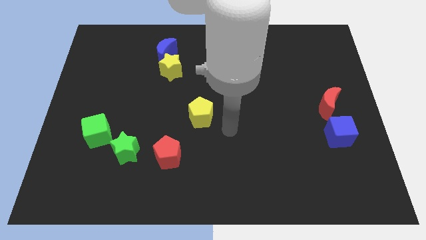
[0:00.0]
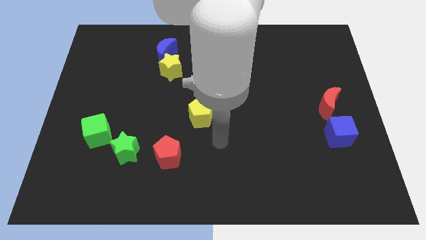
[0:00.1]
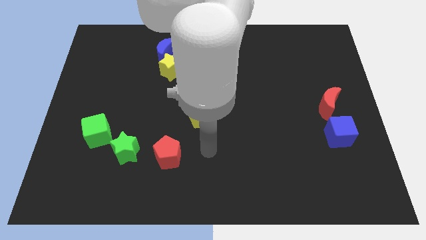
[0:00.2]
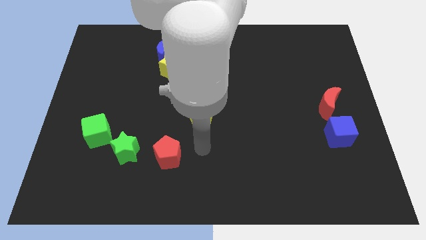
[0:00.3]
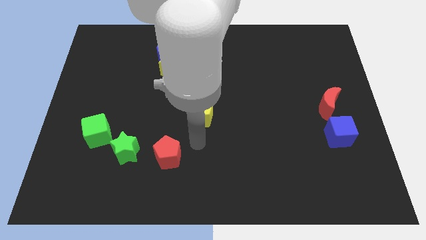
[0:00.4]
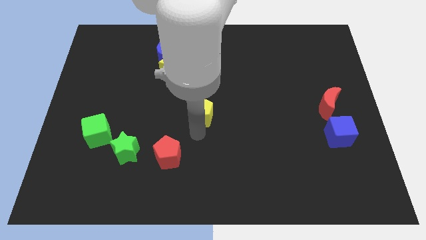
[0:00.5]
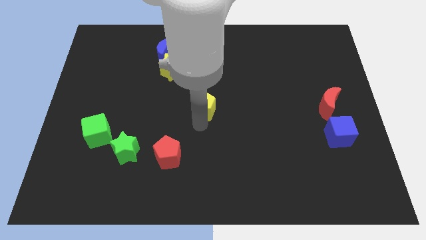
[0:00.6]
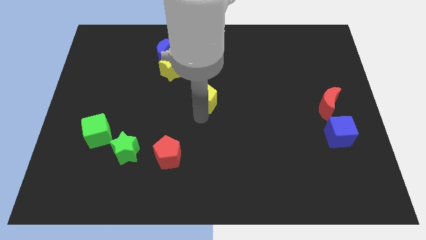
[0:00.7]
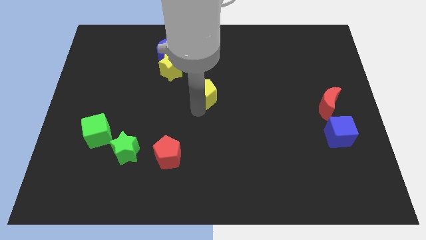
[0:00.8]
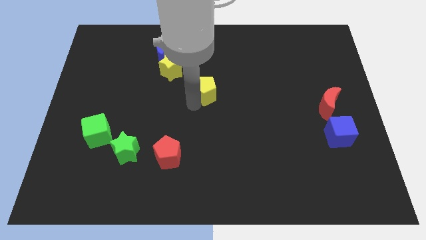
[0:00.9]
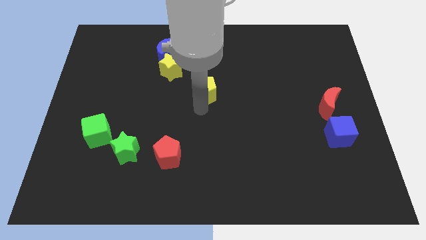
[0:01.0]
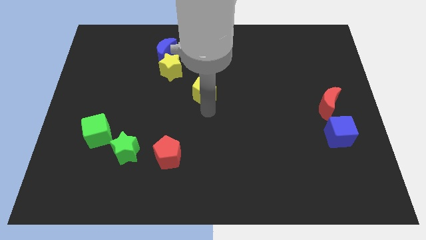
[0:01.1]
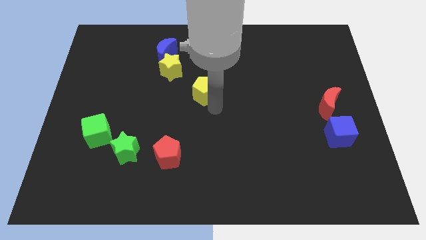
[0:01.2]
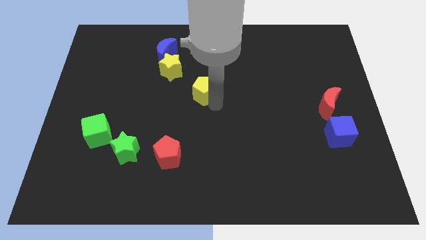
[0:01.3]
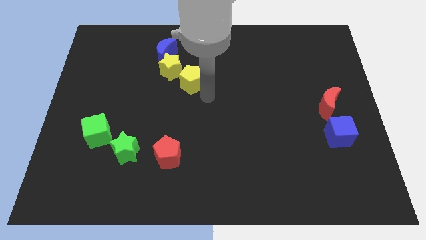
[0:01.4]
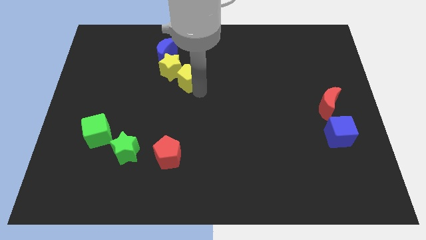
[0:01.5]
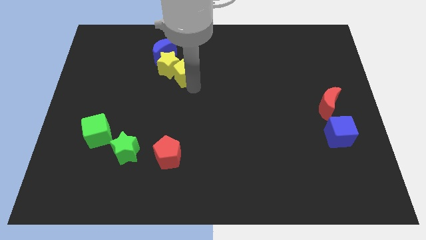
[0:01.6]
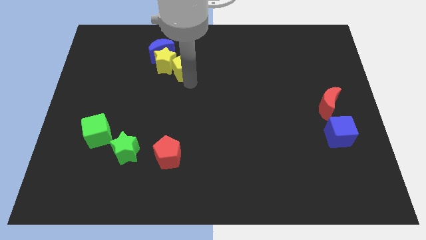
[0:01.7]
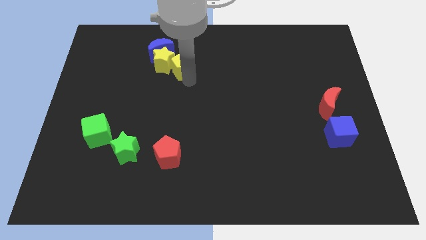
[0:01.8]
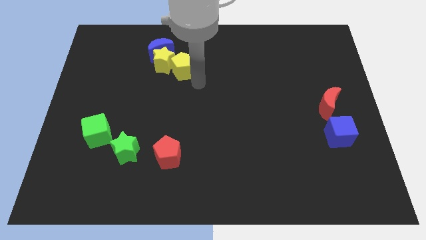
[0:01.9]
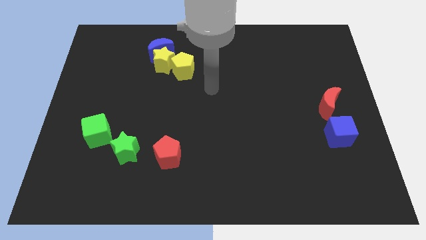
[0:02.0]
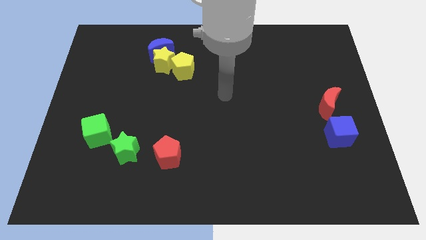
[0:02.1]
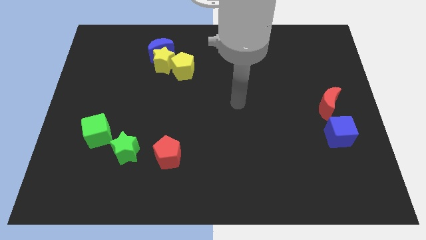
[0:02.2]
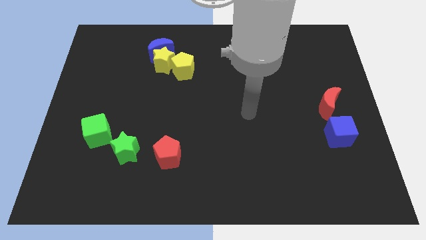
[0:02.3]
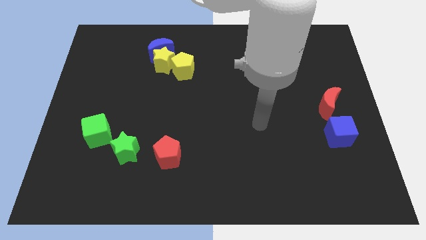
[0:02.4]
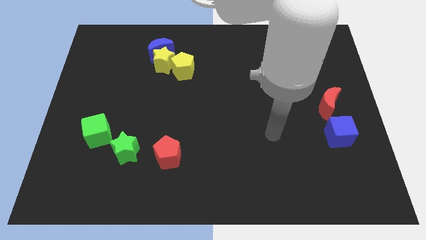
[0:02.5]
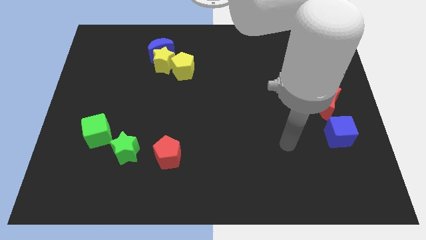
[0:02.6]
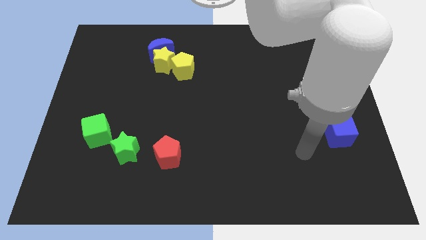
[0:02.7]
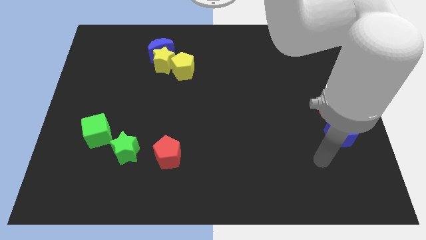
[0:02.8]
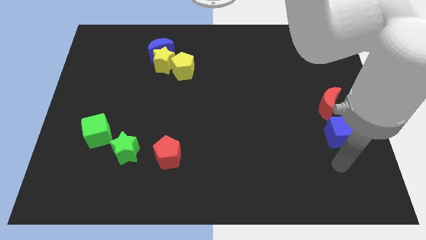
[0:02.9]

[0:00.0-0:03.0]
move the yellow pentagon into the yellow star

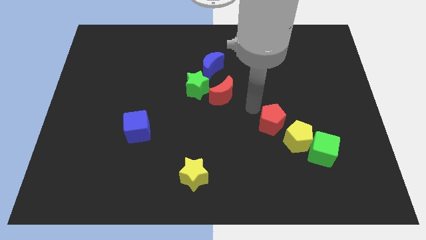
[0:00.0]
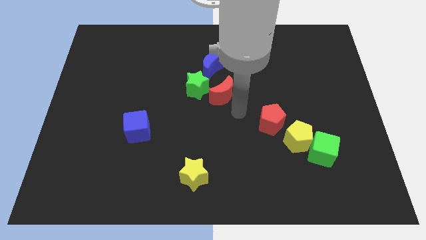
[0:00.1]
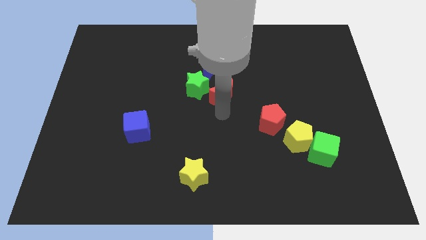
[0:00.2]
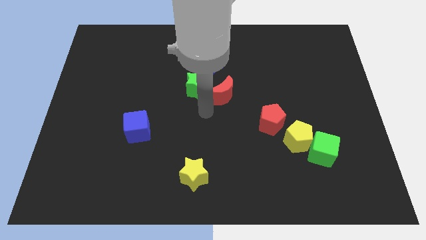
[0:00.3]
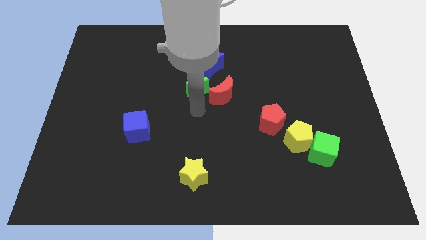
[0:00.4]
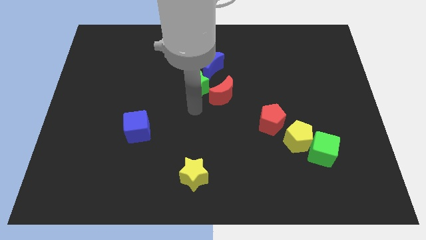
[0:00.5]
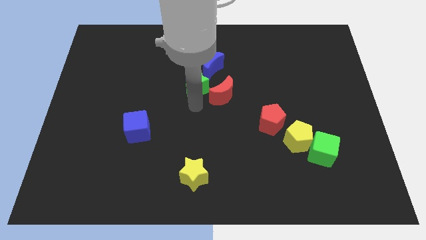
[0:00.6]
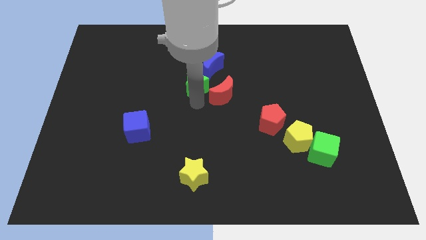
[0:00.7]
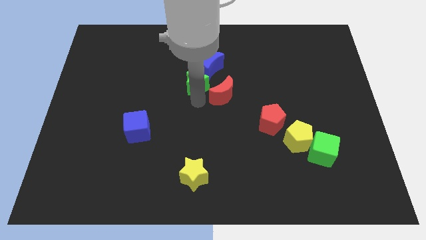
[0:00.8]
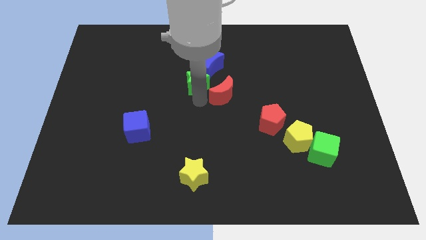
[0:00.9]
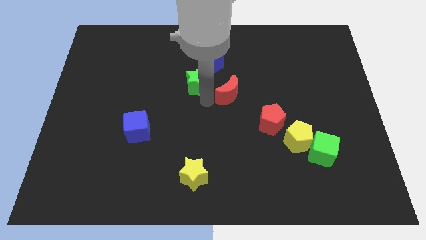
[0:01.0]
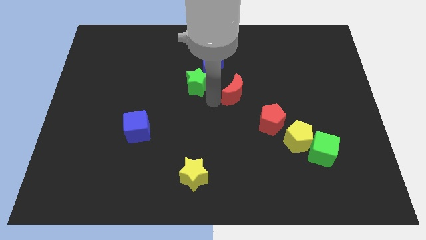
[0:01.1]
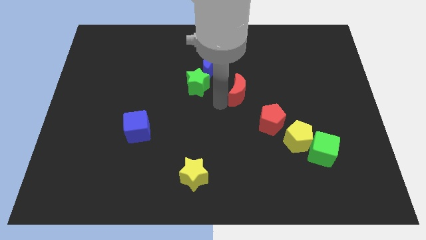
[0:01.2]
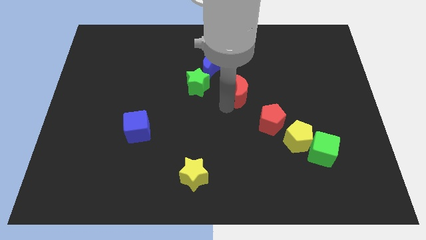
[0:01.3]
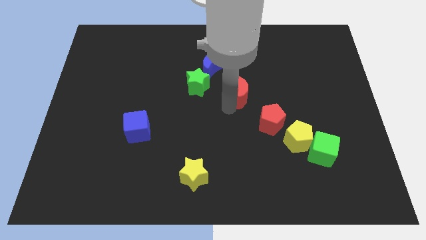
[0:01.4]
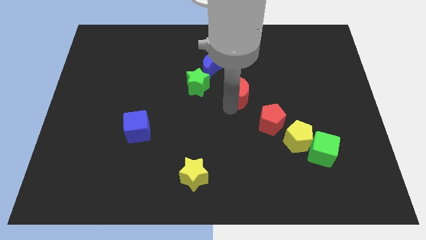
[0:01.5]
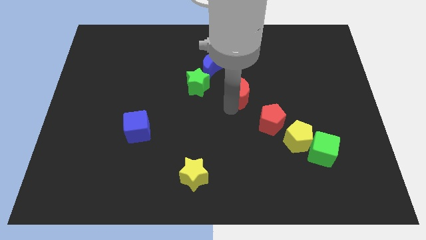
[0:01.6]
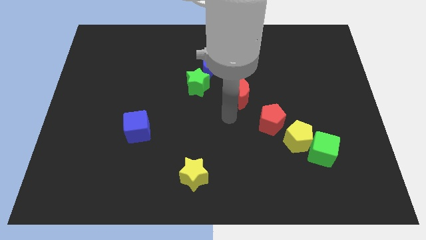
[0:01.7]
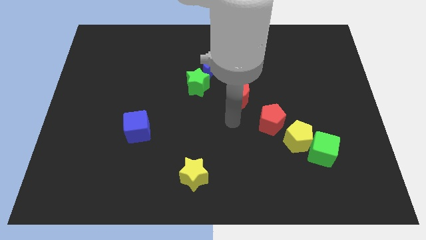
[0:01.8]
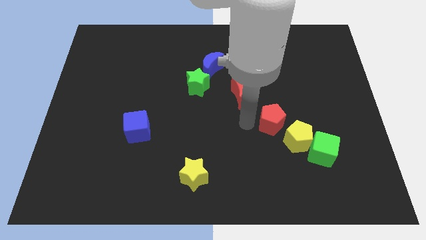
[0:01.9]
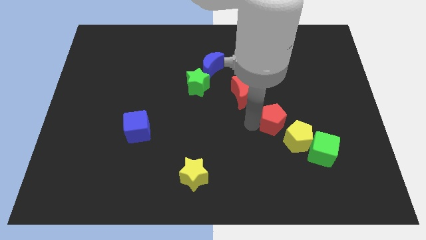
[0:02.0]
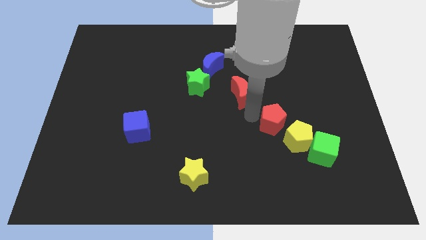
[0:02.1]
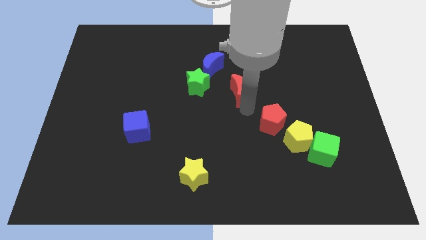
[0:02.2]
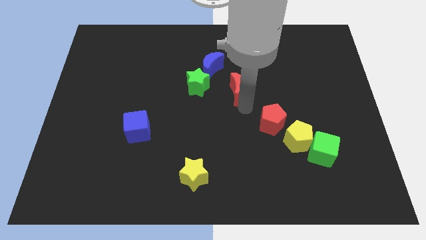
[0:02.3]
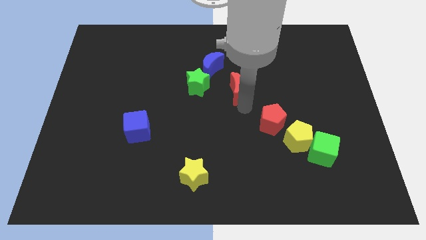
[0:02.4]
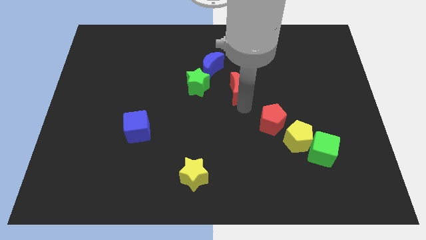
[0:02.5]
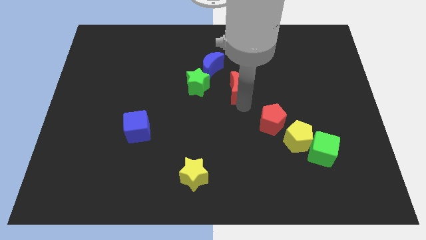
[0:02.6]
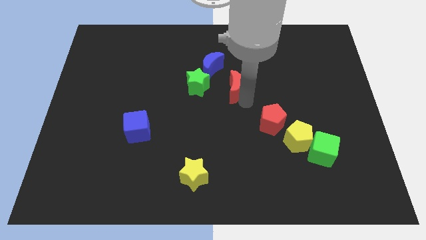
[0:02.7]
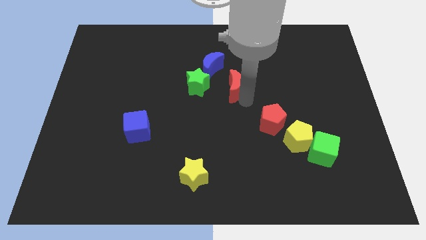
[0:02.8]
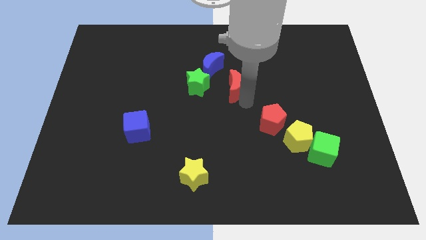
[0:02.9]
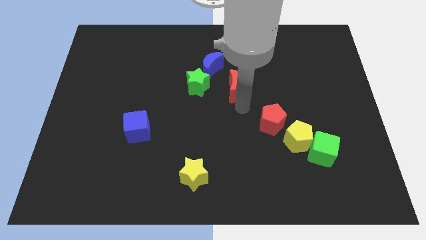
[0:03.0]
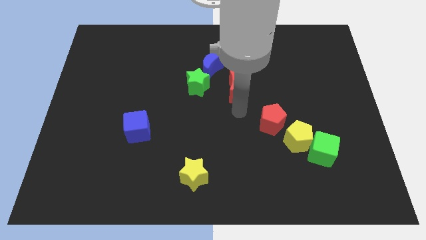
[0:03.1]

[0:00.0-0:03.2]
move the red crescent horizontally to the right side of the green star

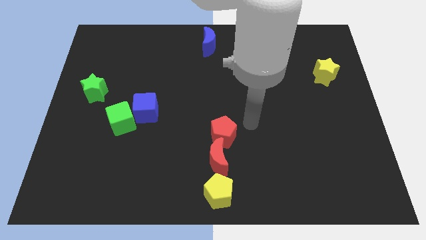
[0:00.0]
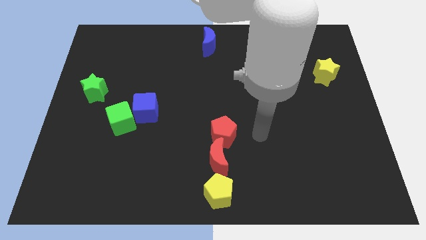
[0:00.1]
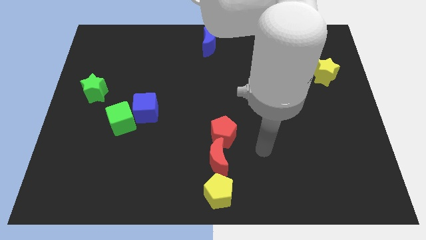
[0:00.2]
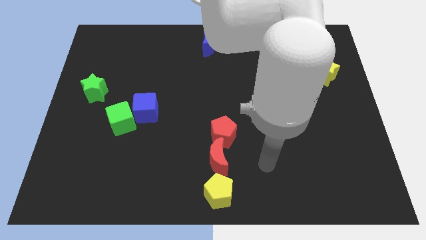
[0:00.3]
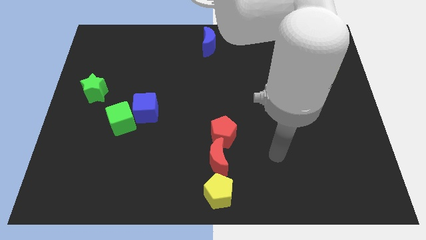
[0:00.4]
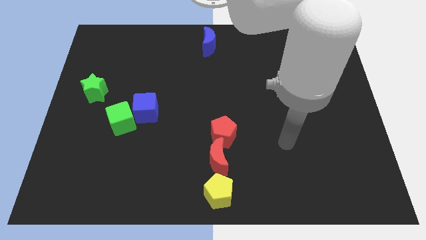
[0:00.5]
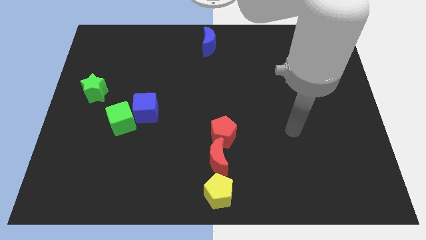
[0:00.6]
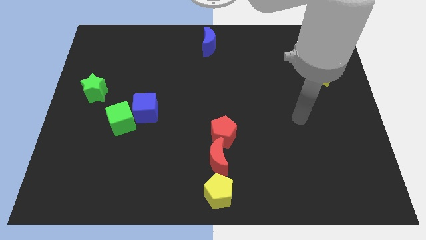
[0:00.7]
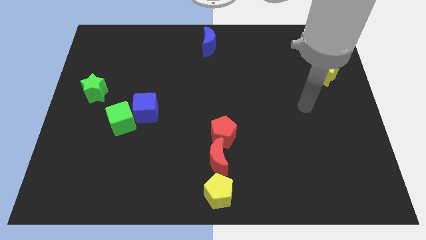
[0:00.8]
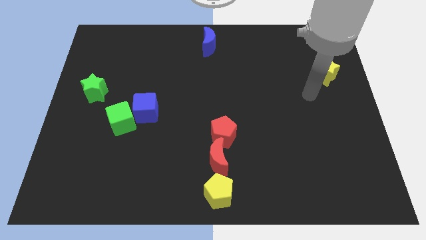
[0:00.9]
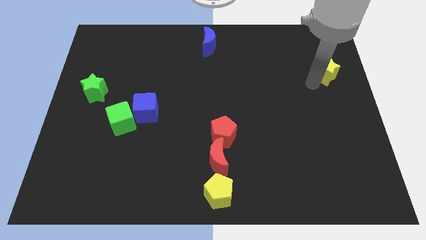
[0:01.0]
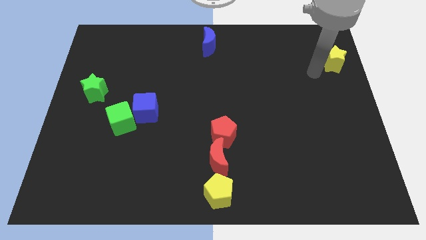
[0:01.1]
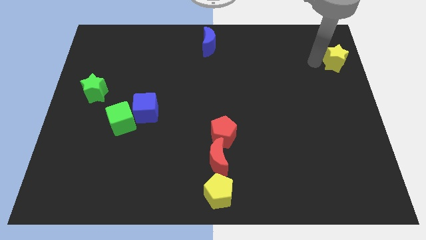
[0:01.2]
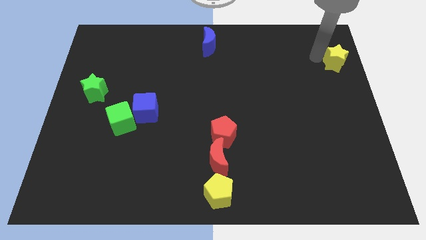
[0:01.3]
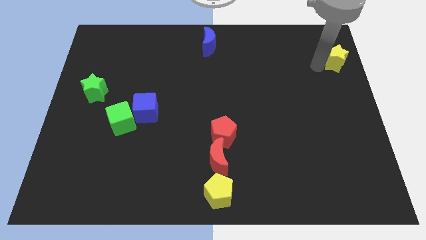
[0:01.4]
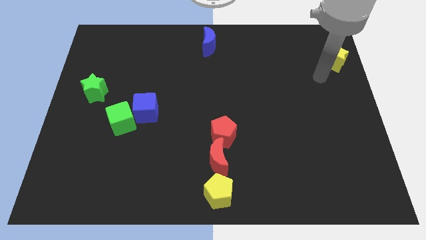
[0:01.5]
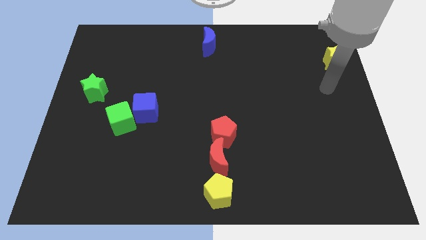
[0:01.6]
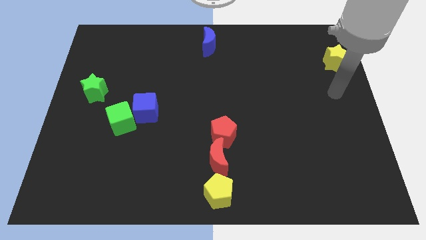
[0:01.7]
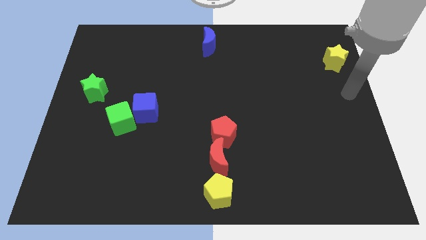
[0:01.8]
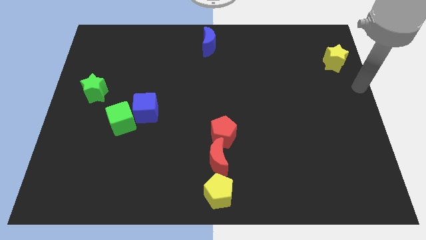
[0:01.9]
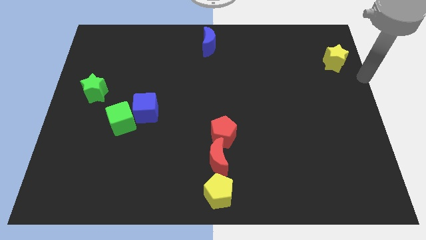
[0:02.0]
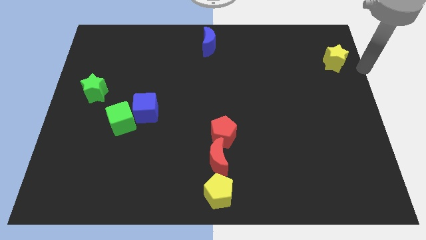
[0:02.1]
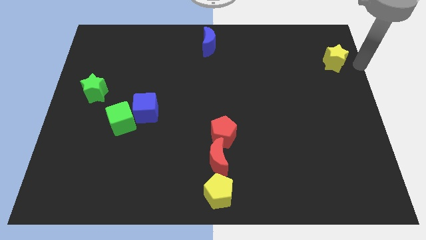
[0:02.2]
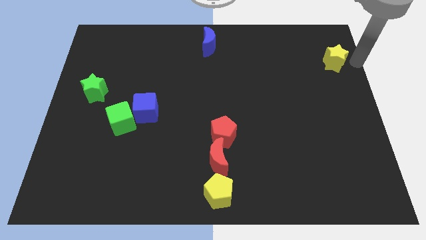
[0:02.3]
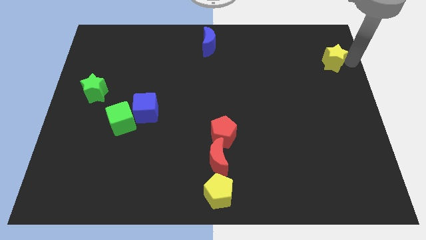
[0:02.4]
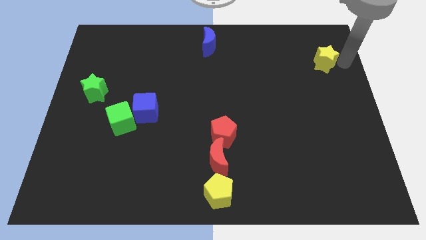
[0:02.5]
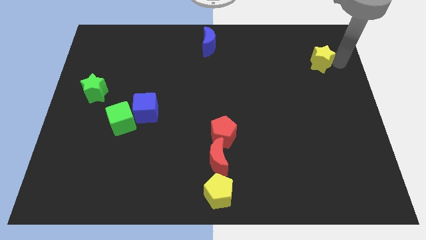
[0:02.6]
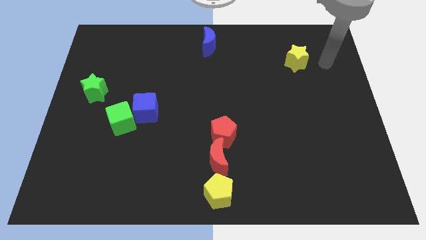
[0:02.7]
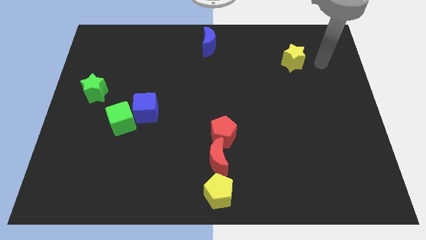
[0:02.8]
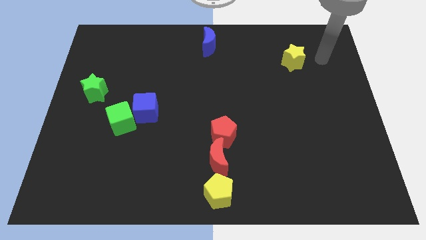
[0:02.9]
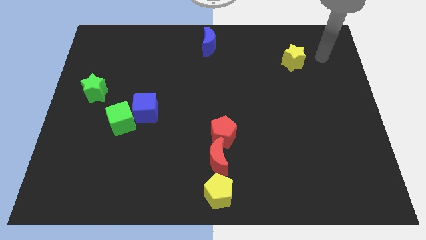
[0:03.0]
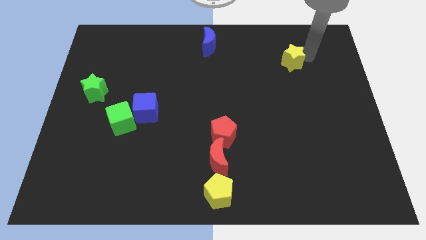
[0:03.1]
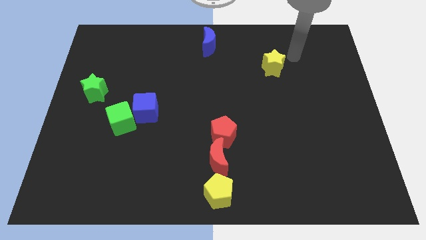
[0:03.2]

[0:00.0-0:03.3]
move the yellow star slightly to the left
